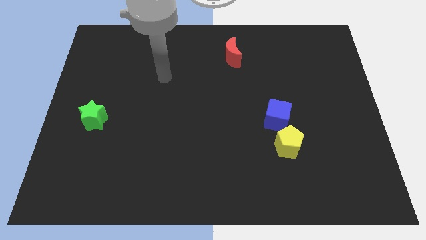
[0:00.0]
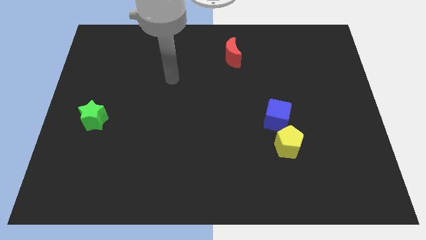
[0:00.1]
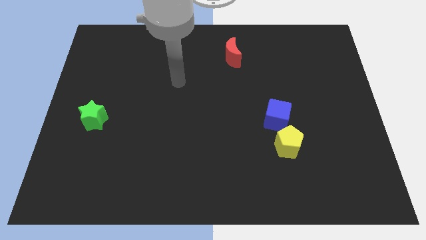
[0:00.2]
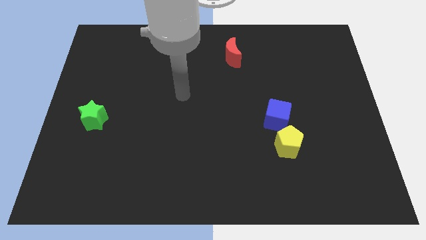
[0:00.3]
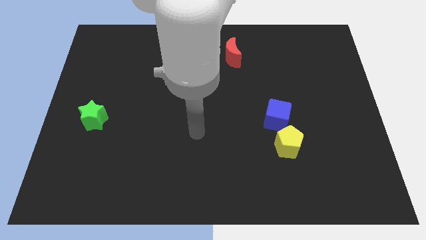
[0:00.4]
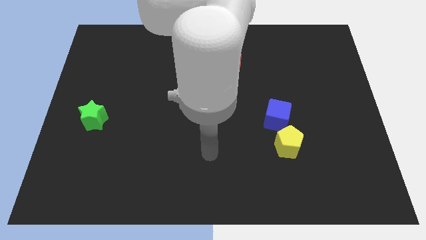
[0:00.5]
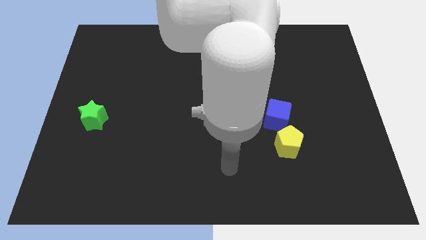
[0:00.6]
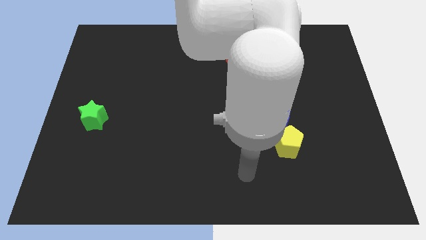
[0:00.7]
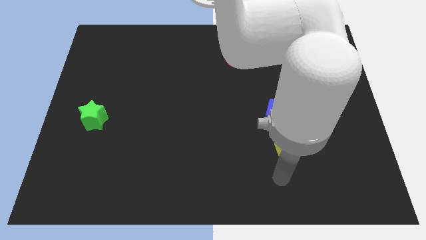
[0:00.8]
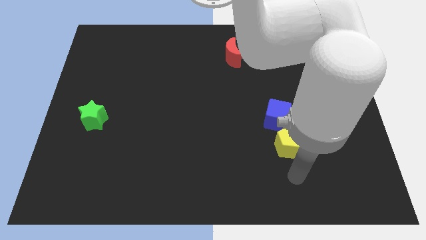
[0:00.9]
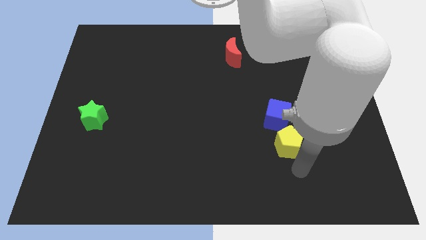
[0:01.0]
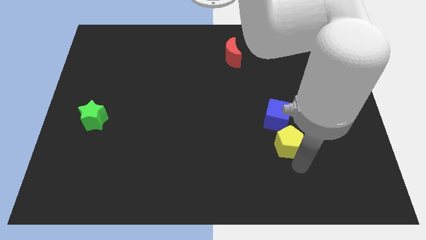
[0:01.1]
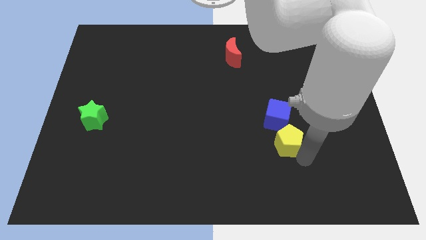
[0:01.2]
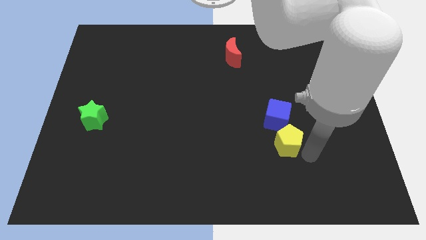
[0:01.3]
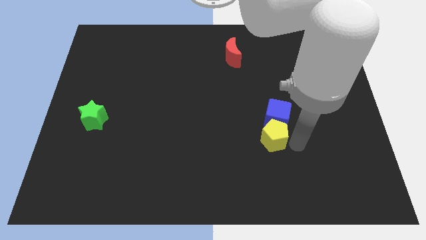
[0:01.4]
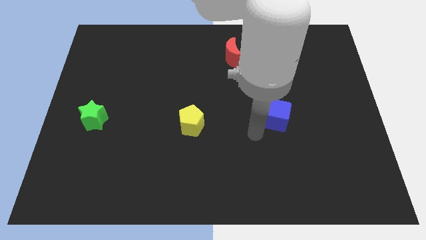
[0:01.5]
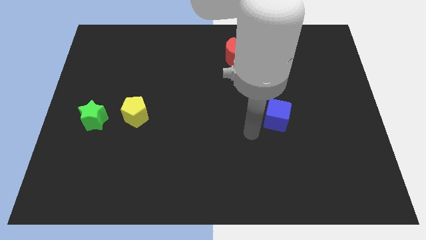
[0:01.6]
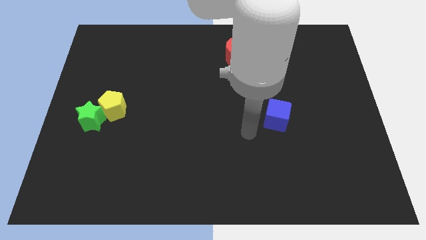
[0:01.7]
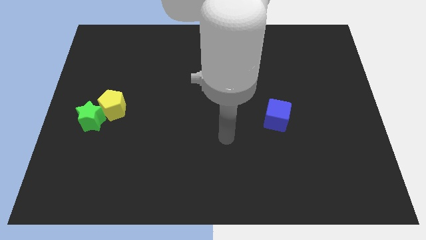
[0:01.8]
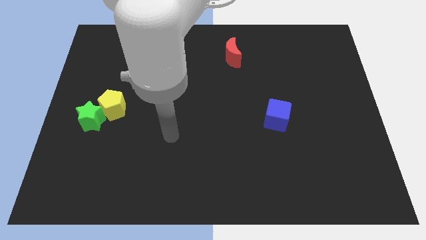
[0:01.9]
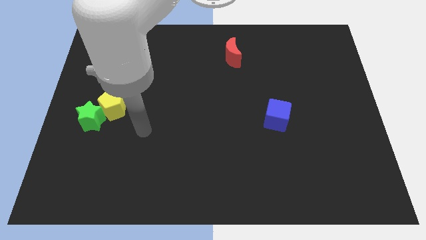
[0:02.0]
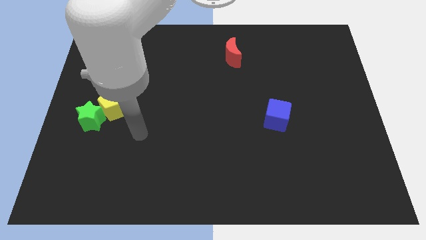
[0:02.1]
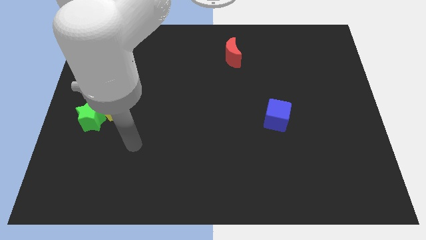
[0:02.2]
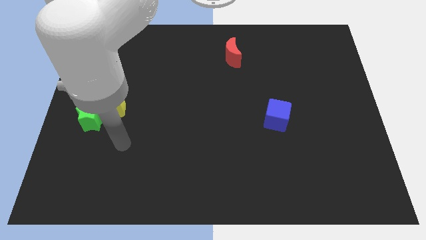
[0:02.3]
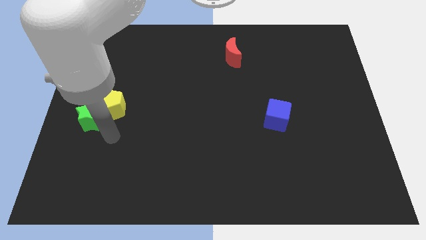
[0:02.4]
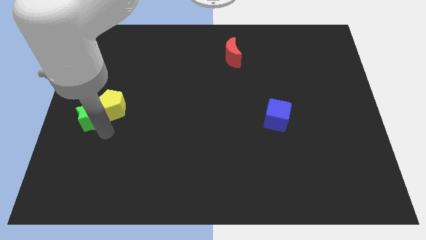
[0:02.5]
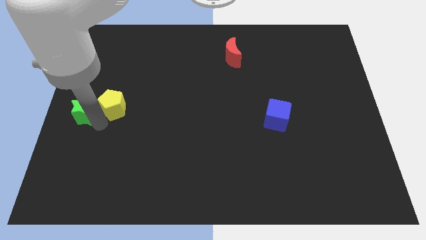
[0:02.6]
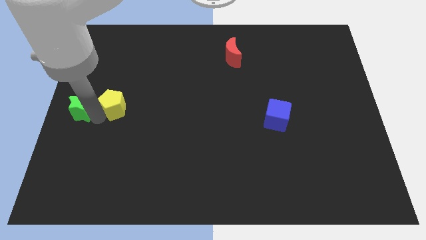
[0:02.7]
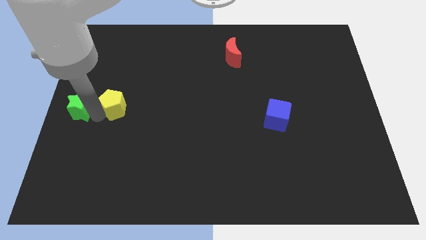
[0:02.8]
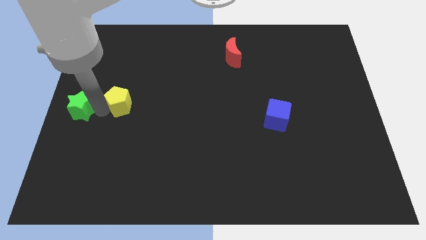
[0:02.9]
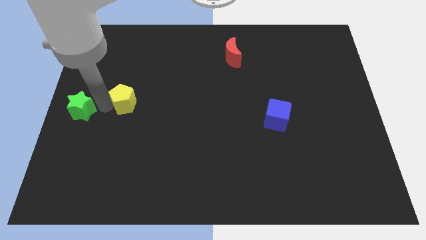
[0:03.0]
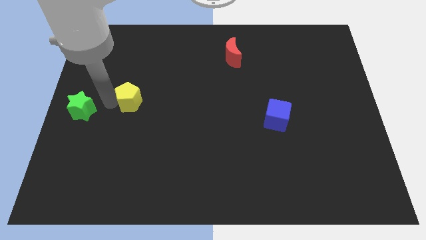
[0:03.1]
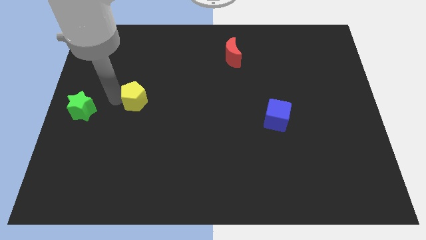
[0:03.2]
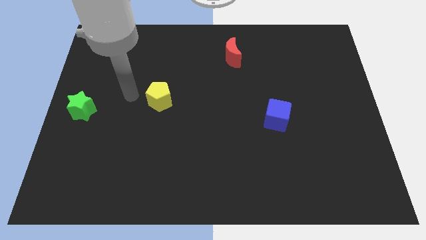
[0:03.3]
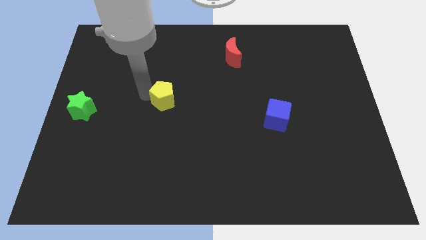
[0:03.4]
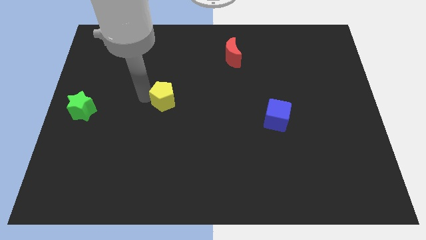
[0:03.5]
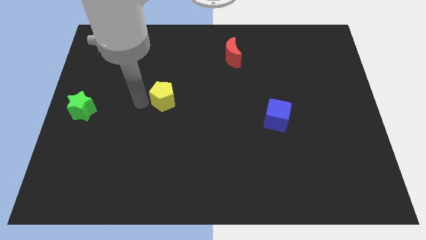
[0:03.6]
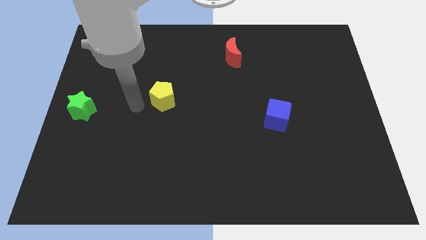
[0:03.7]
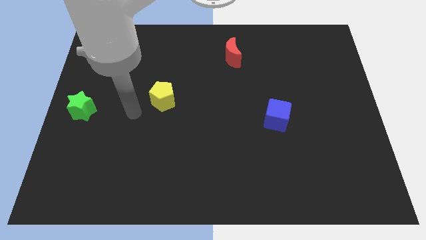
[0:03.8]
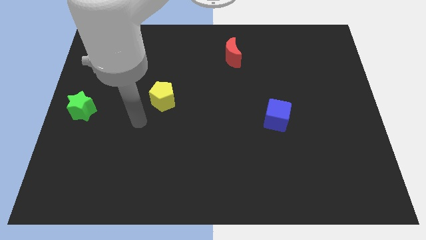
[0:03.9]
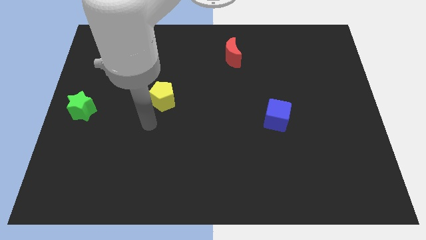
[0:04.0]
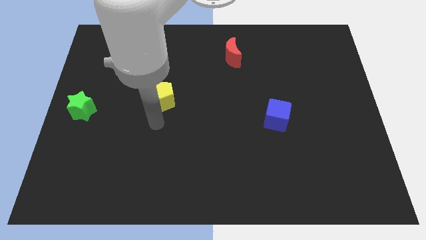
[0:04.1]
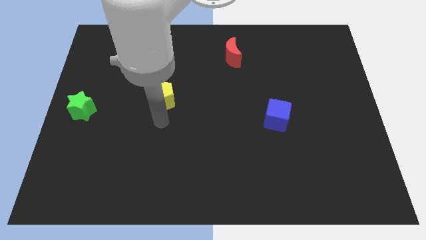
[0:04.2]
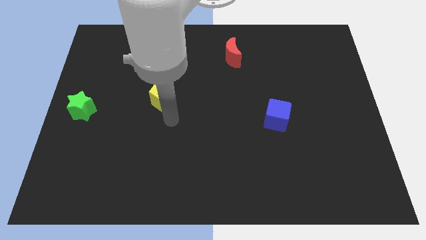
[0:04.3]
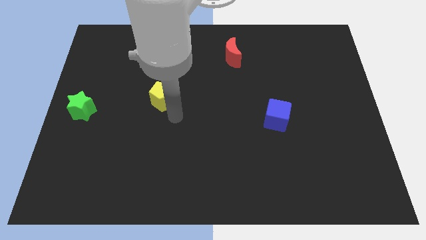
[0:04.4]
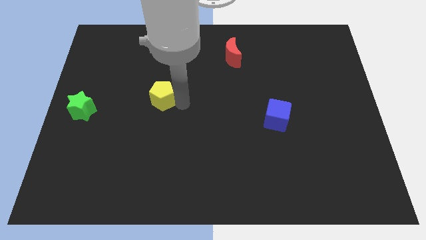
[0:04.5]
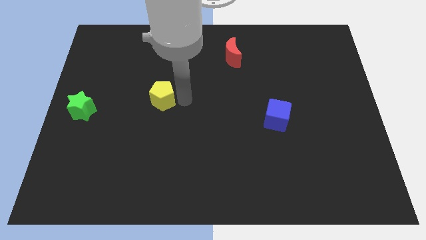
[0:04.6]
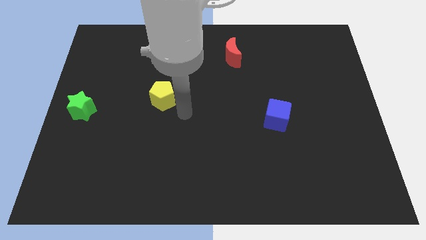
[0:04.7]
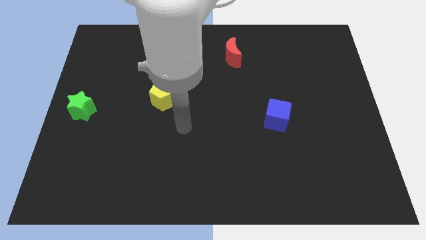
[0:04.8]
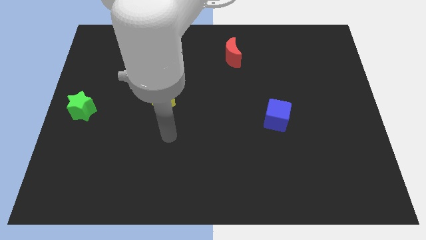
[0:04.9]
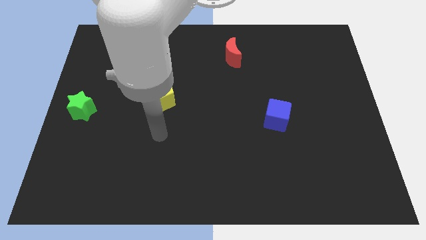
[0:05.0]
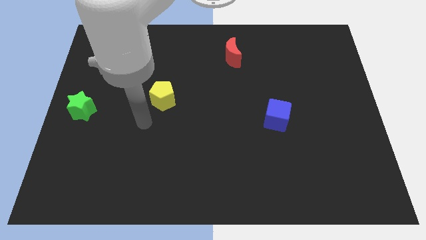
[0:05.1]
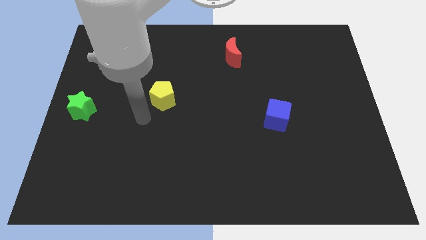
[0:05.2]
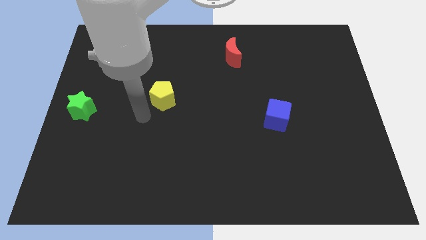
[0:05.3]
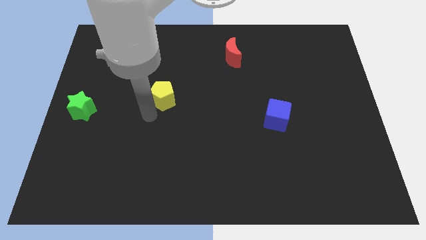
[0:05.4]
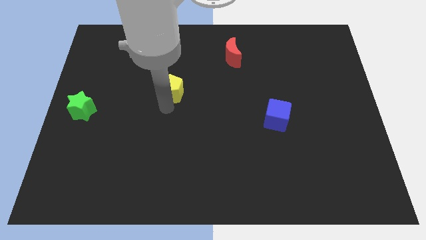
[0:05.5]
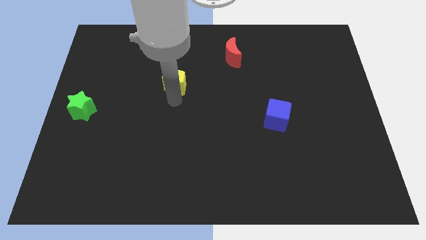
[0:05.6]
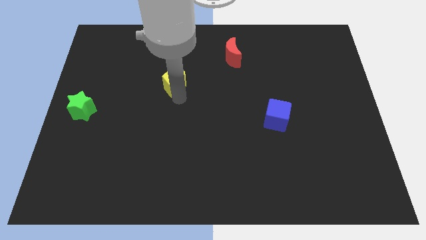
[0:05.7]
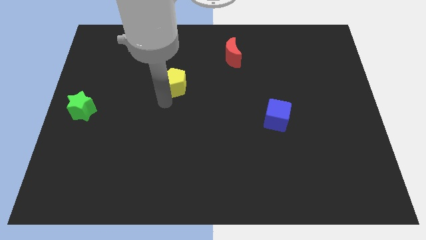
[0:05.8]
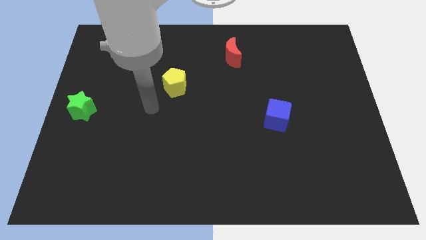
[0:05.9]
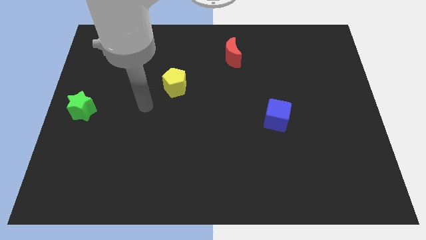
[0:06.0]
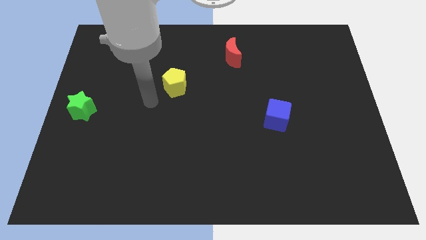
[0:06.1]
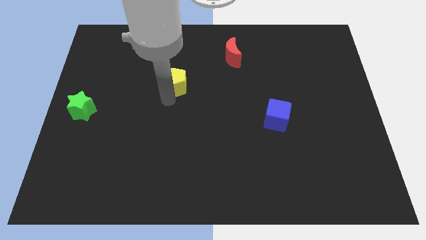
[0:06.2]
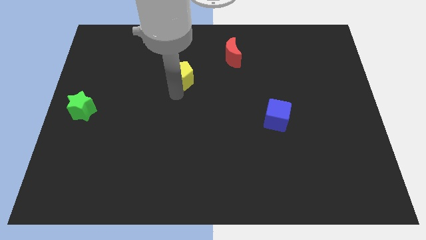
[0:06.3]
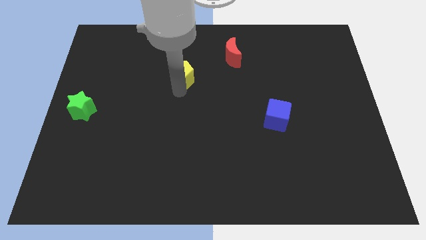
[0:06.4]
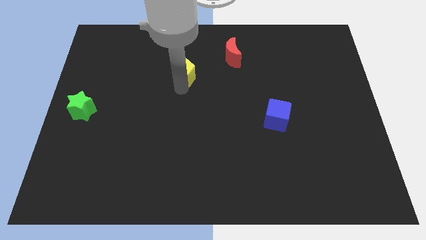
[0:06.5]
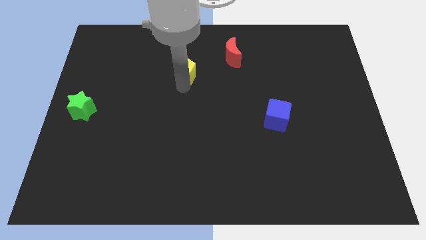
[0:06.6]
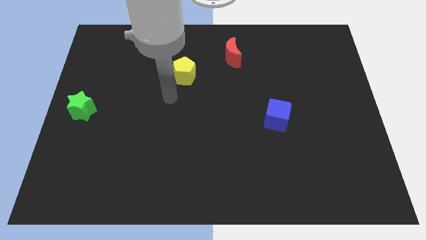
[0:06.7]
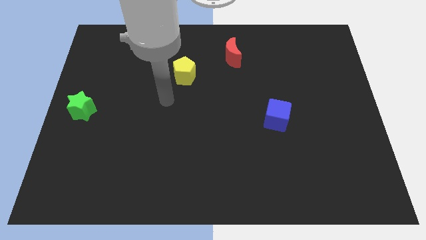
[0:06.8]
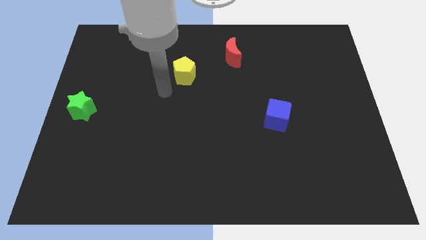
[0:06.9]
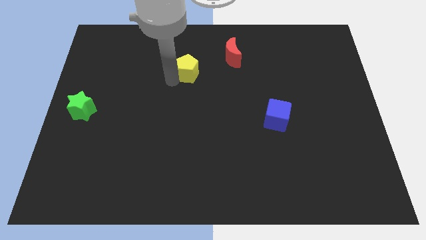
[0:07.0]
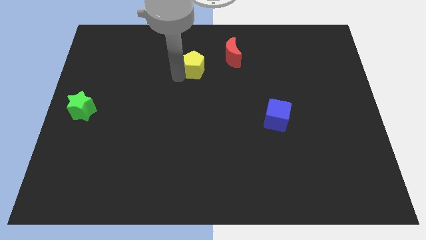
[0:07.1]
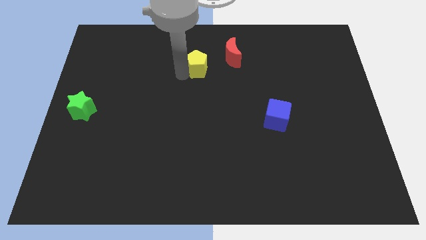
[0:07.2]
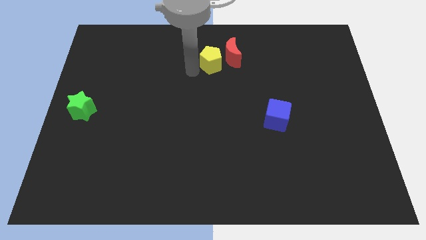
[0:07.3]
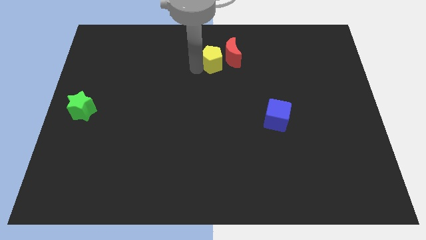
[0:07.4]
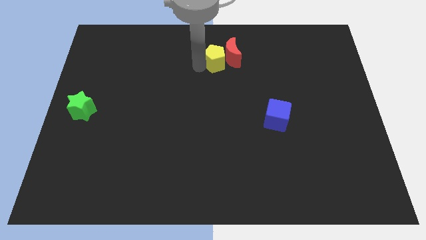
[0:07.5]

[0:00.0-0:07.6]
put the yellow block next to the moon

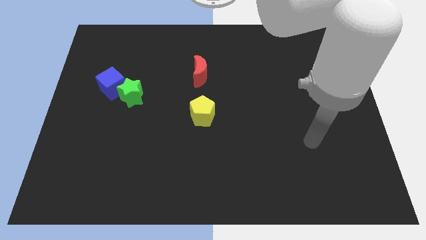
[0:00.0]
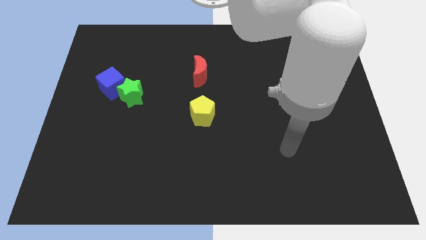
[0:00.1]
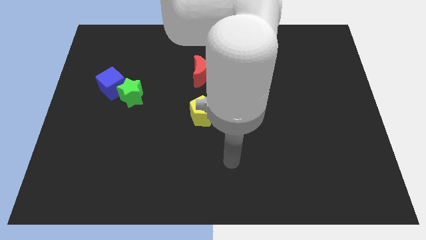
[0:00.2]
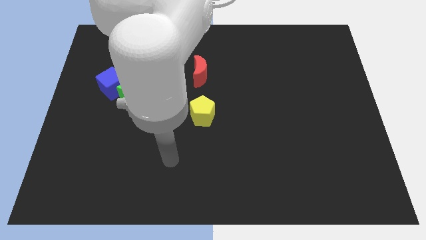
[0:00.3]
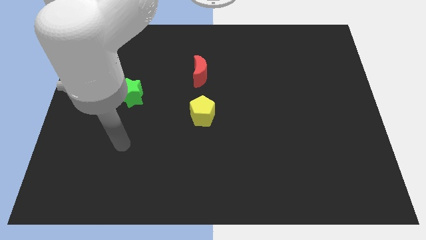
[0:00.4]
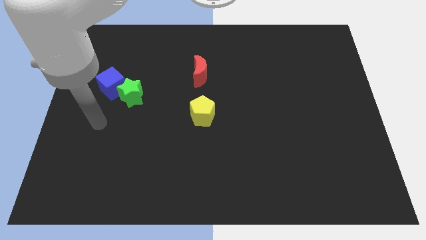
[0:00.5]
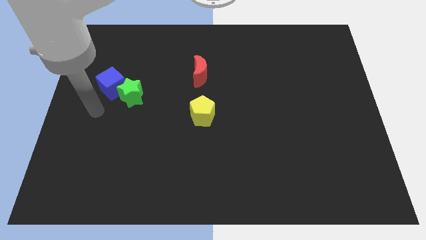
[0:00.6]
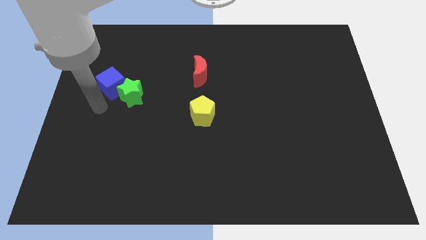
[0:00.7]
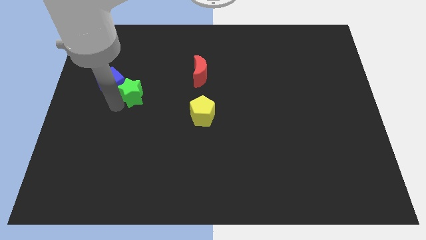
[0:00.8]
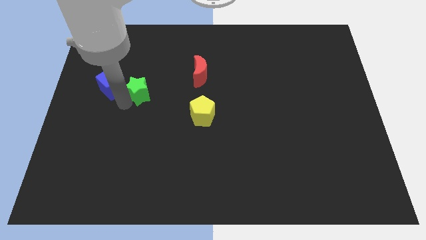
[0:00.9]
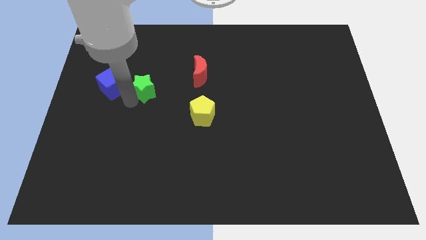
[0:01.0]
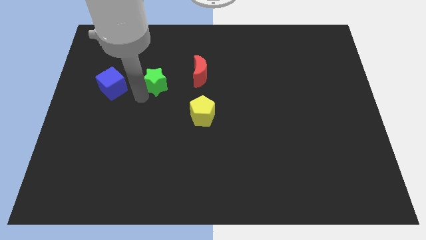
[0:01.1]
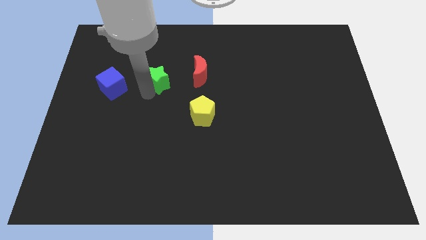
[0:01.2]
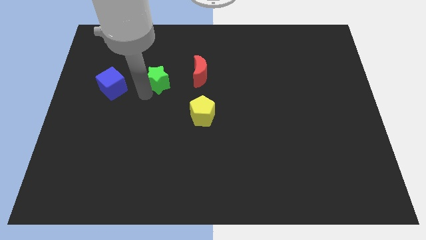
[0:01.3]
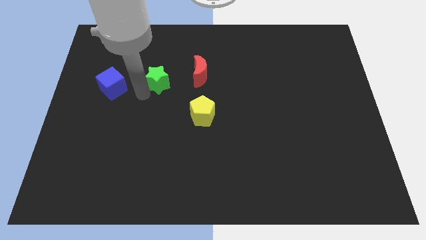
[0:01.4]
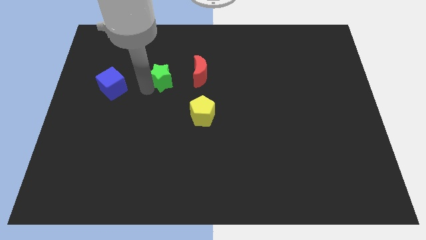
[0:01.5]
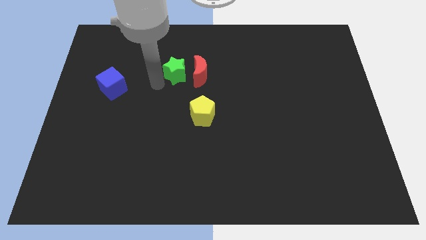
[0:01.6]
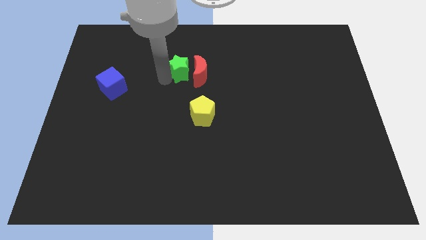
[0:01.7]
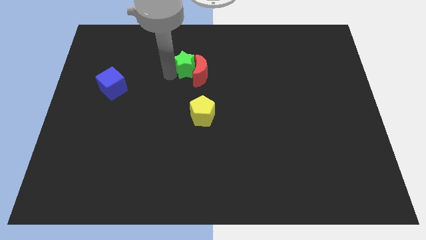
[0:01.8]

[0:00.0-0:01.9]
put the green star to the moon
